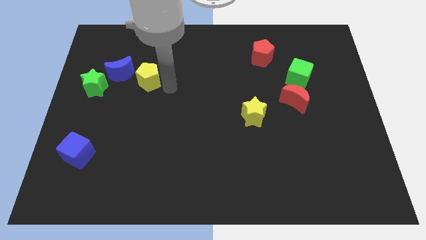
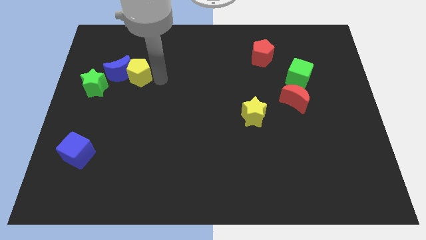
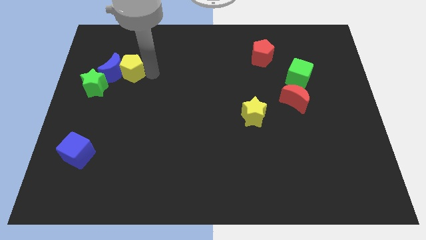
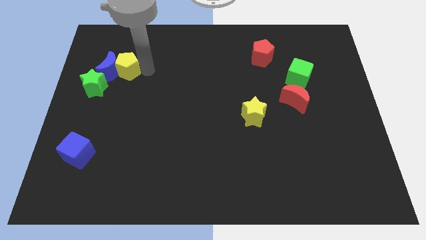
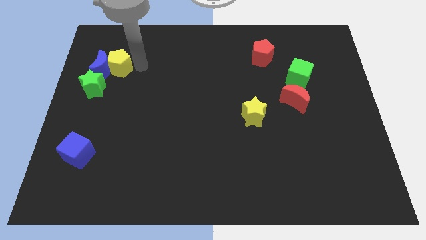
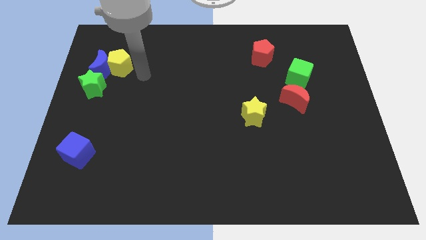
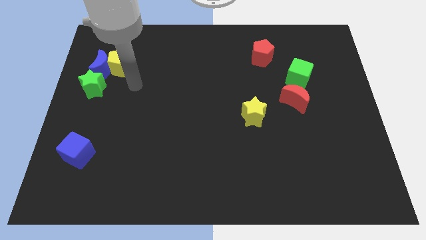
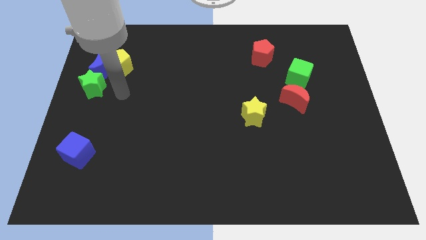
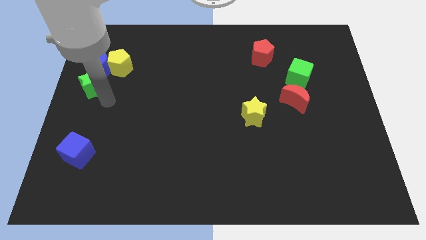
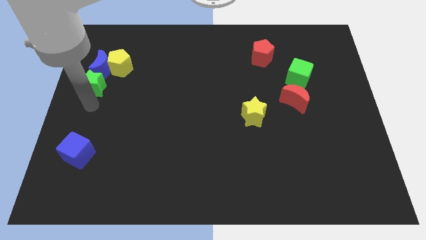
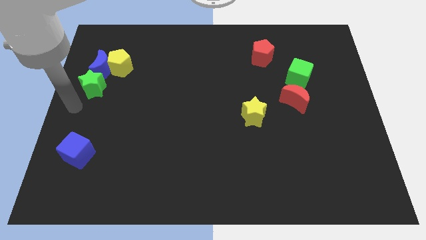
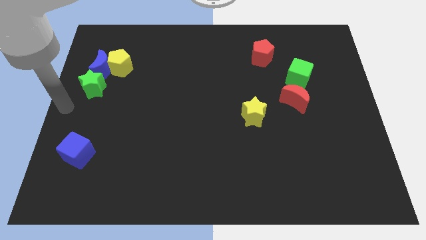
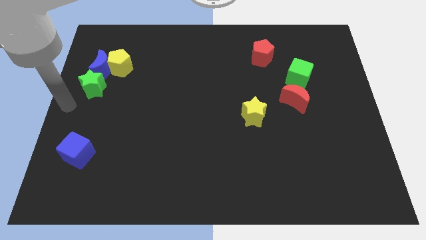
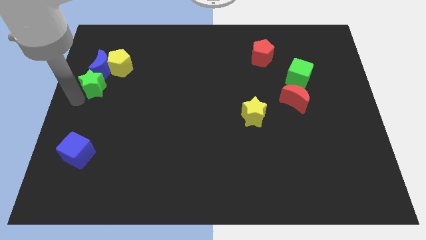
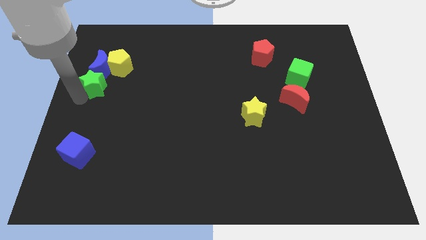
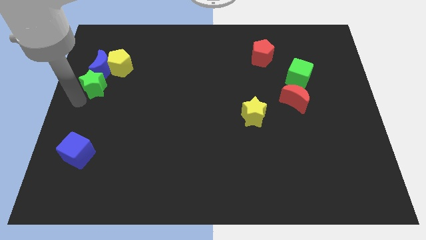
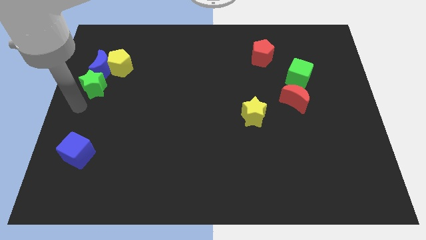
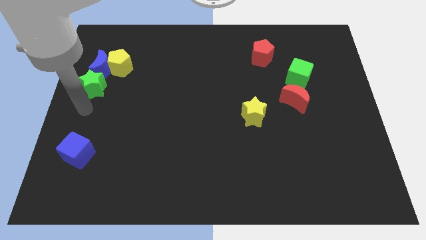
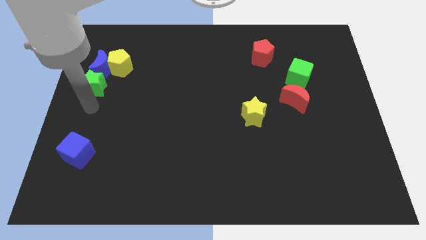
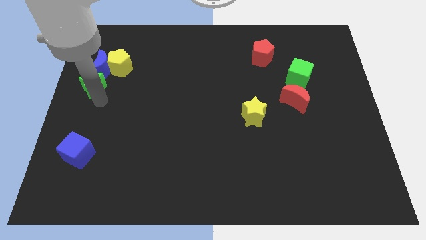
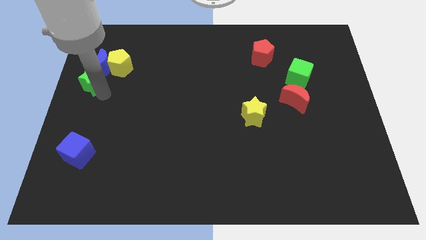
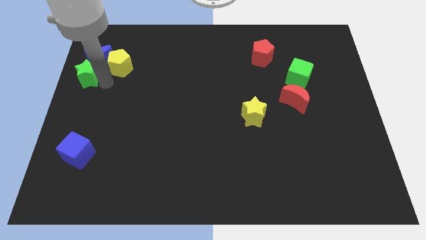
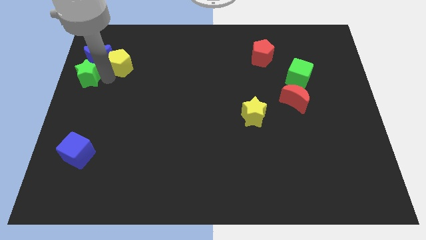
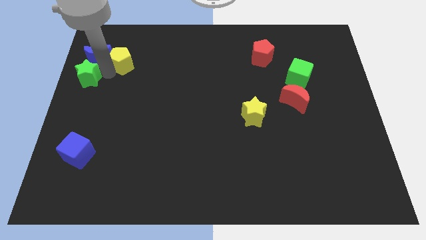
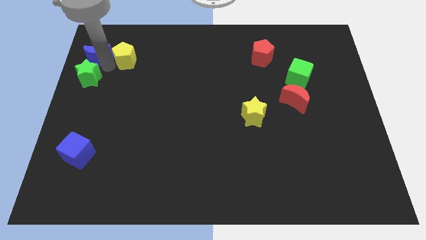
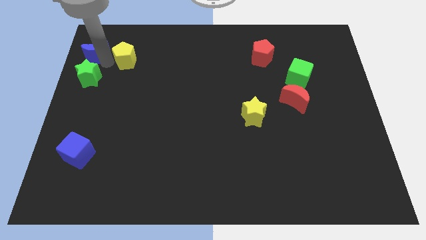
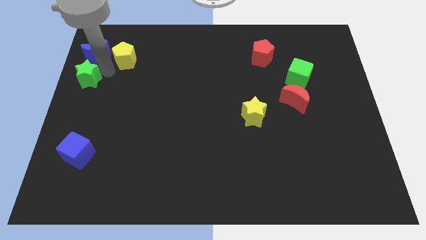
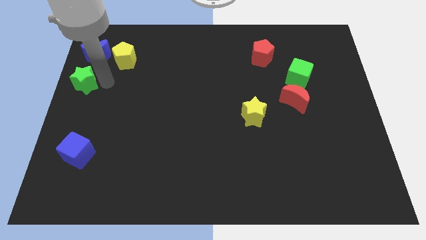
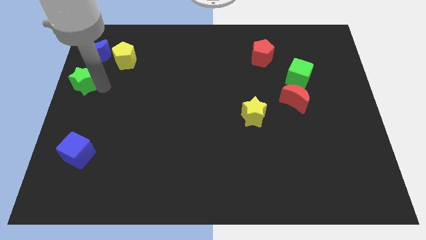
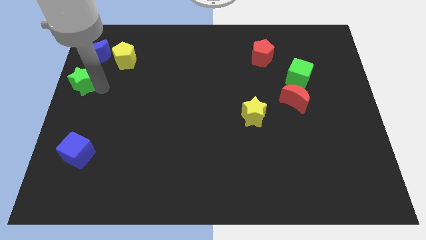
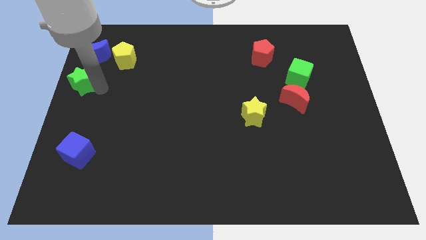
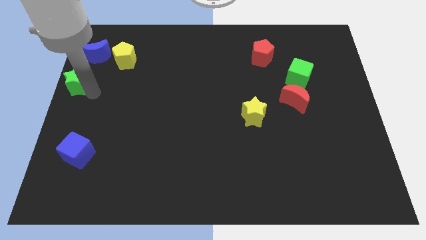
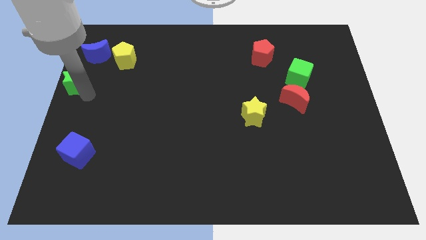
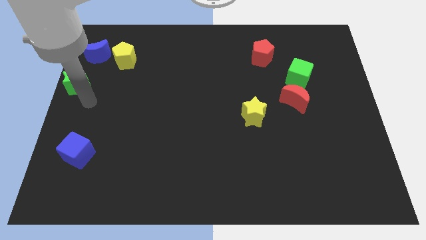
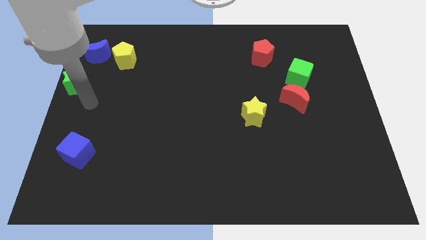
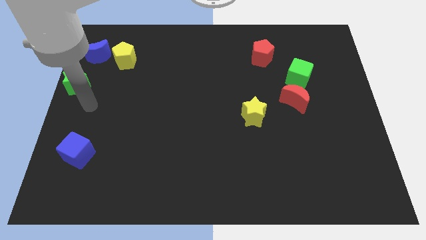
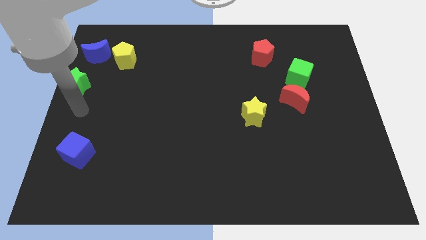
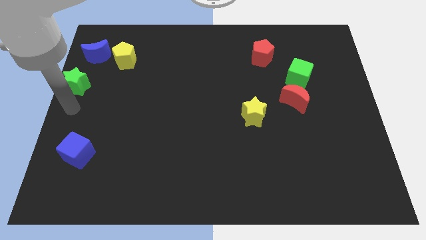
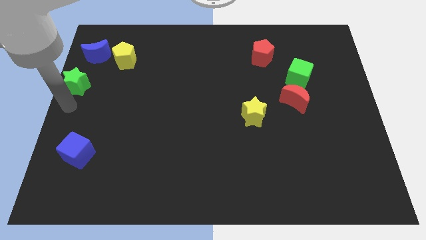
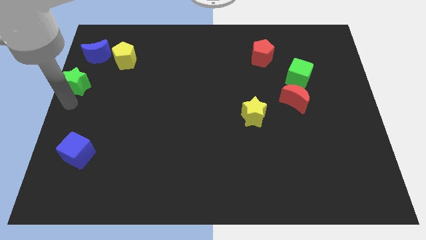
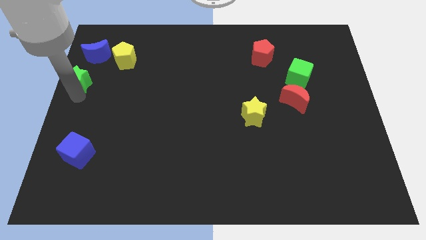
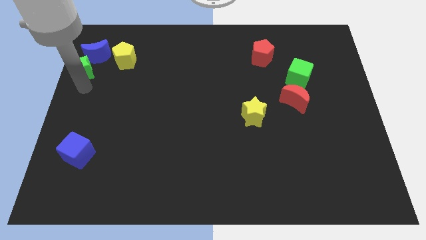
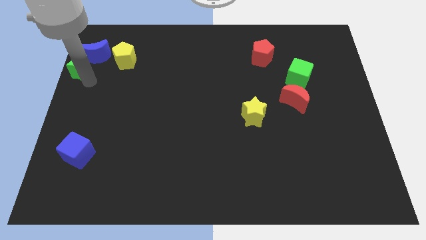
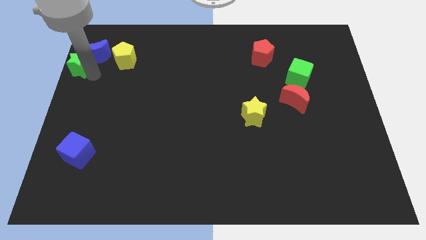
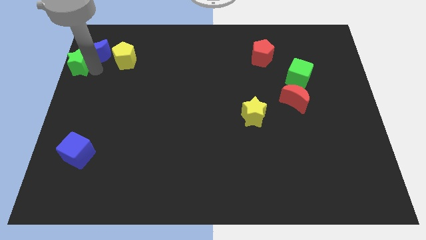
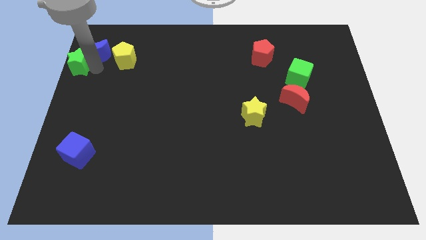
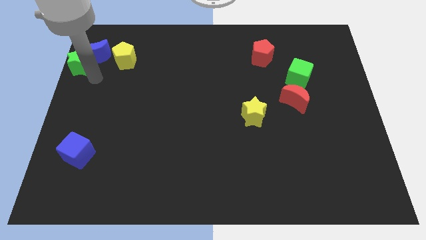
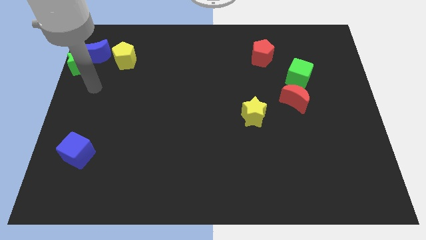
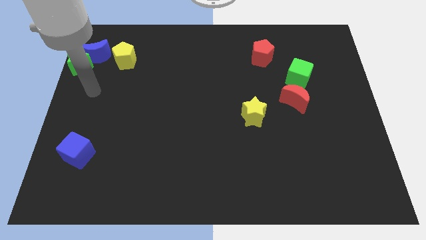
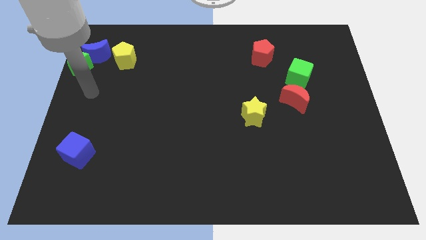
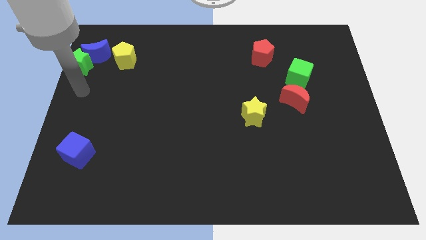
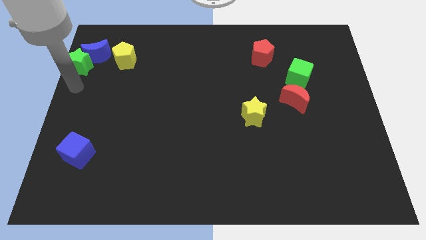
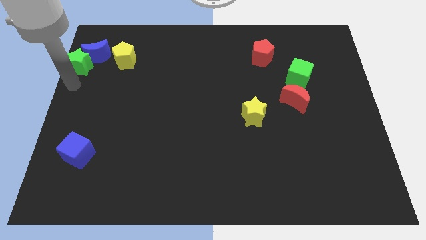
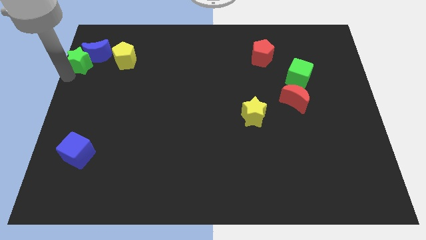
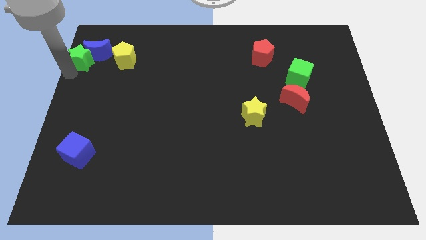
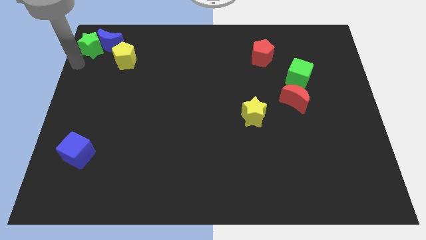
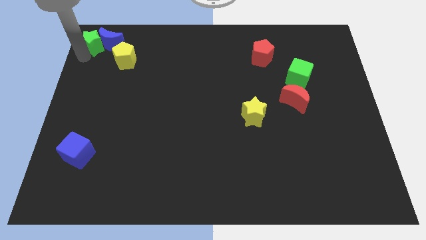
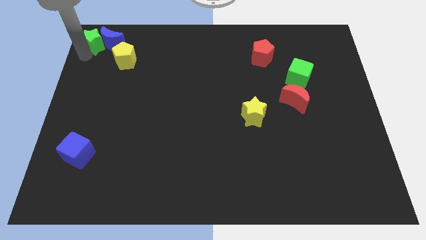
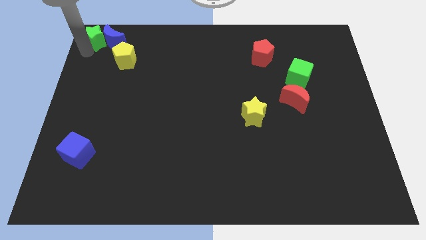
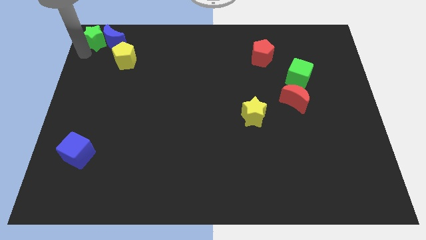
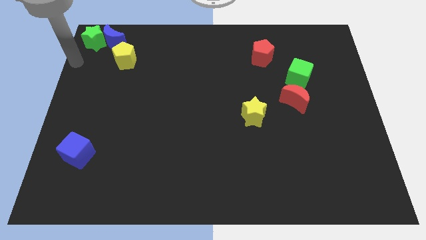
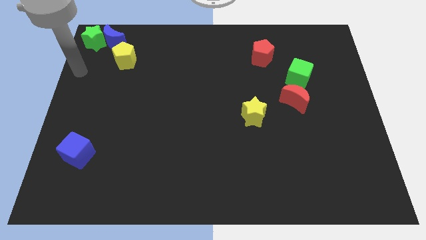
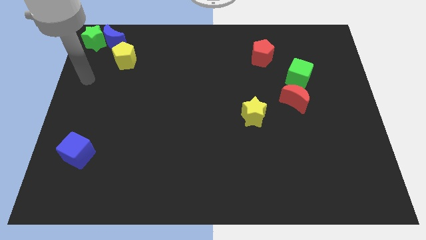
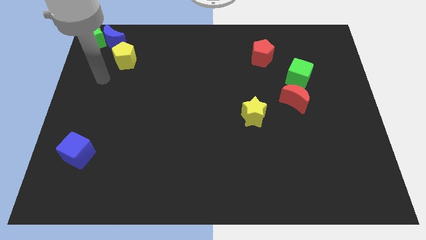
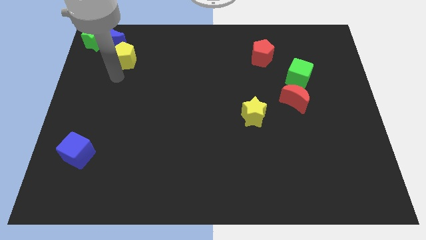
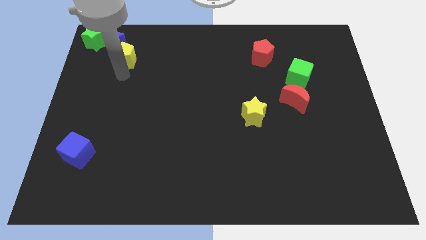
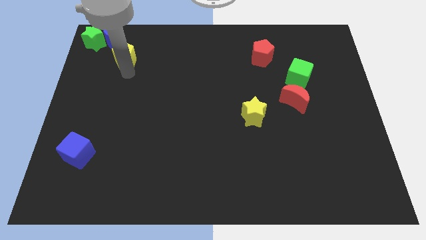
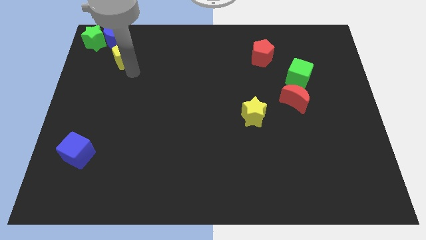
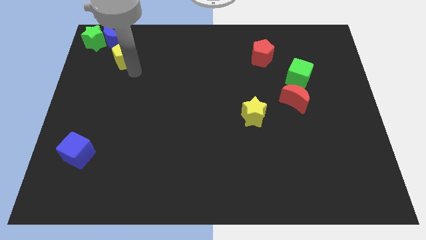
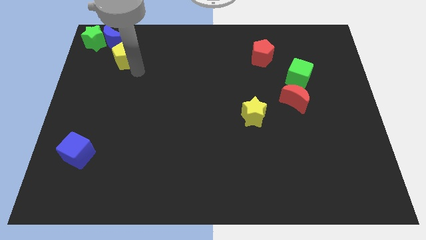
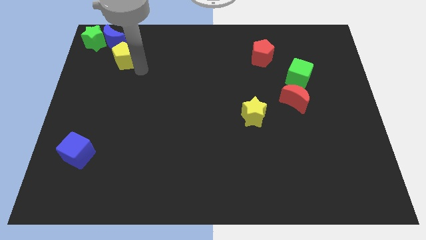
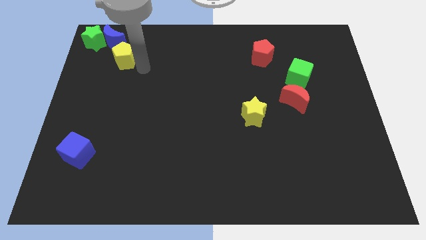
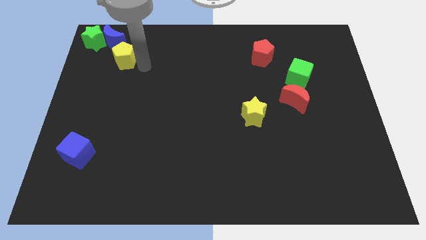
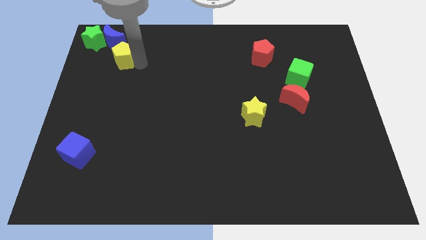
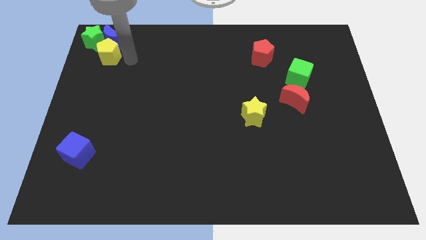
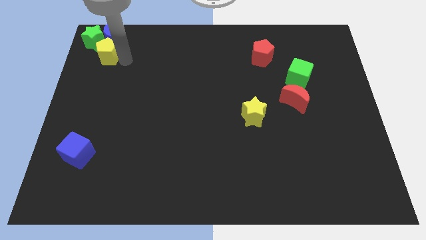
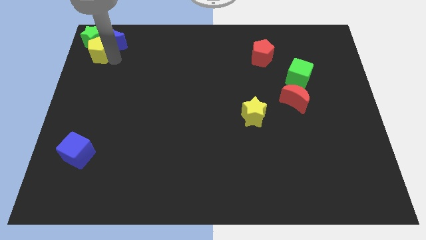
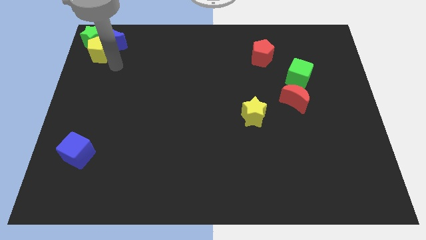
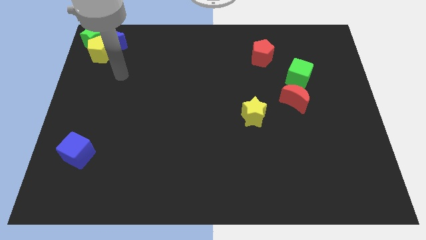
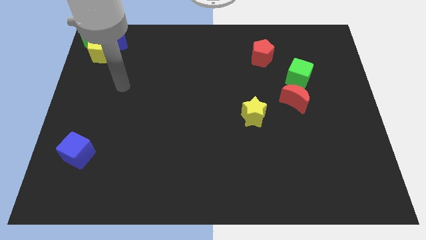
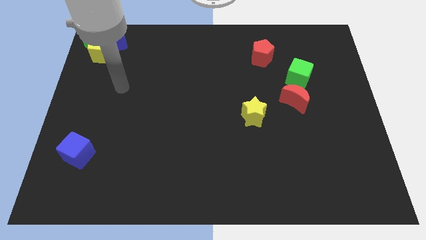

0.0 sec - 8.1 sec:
push green yellow and blue blocks to the top left

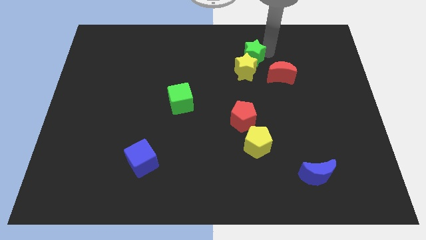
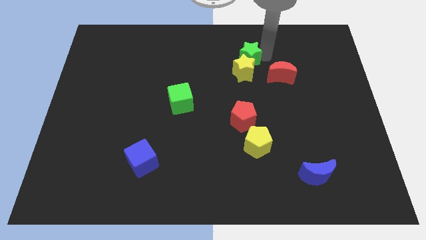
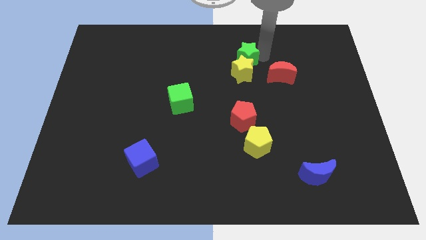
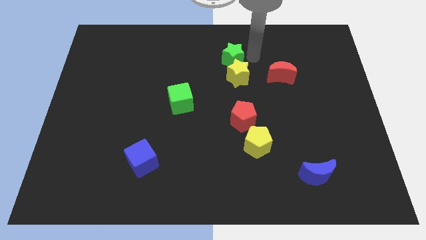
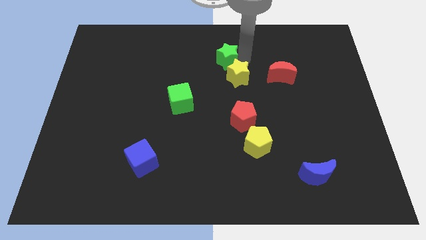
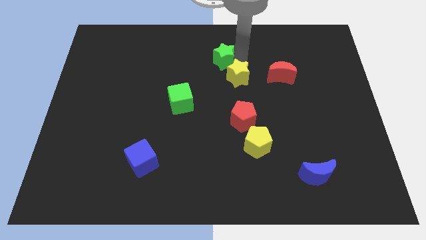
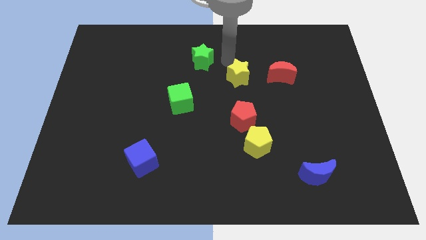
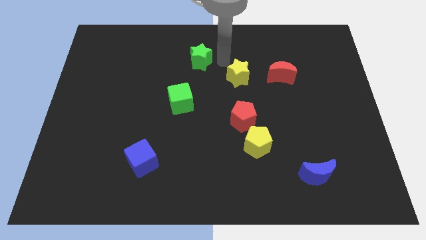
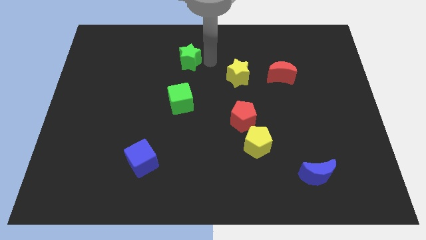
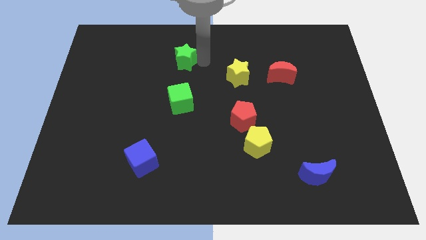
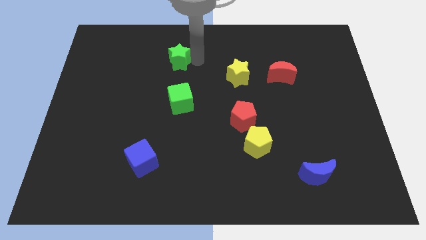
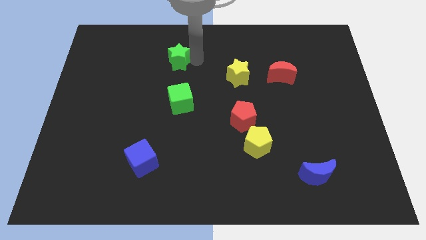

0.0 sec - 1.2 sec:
separate green star and the yellow star
